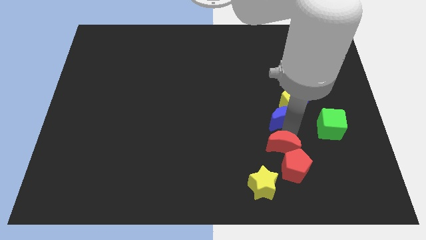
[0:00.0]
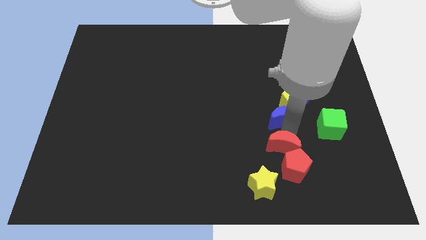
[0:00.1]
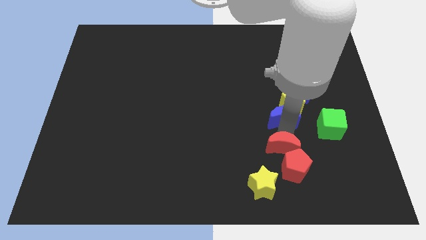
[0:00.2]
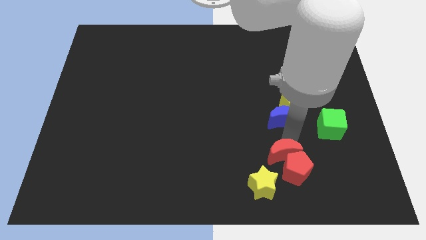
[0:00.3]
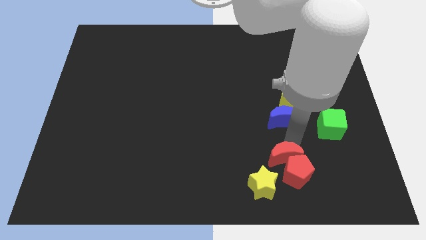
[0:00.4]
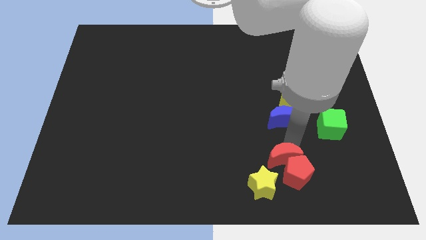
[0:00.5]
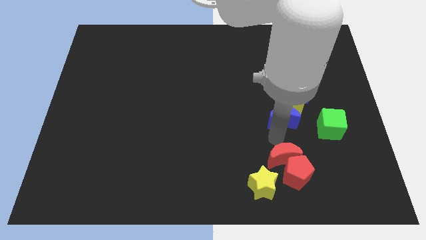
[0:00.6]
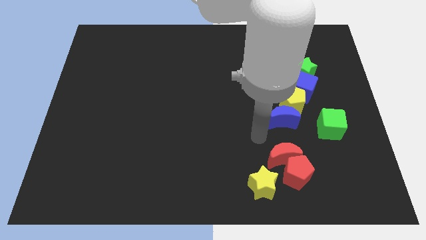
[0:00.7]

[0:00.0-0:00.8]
move the red blocks slightly to the bottom

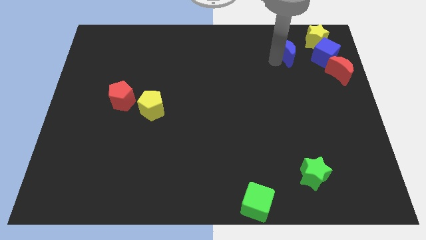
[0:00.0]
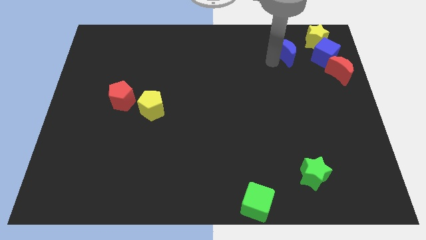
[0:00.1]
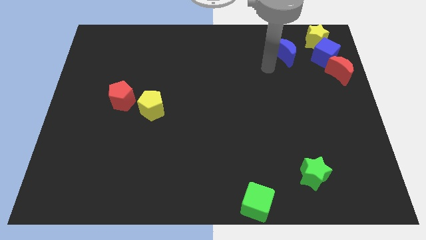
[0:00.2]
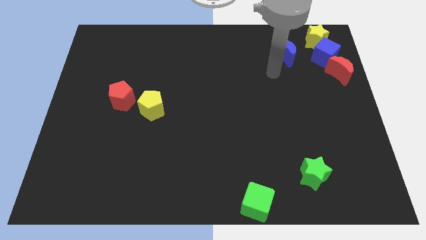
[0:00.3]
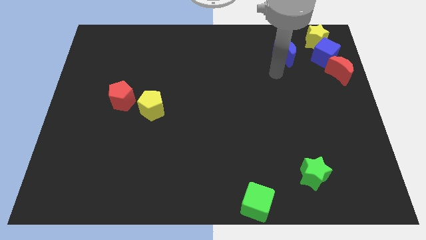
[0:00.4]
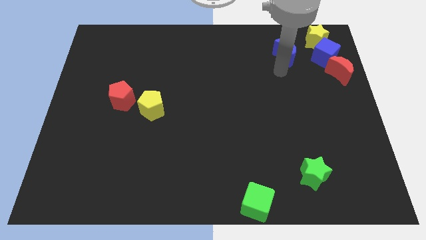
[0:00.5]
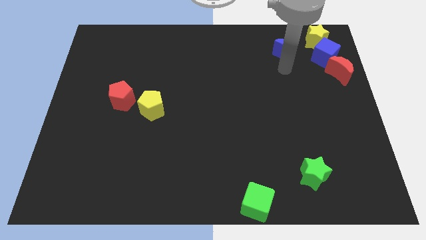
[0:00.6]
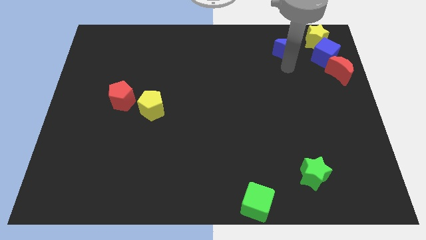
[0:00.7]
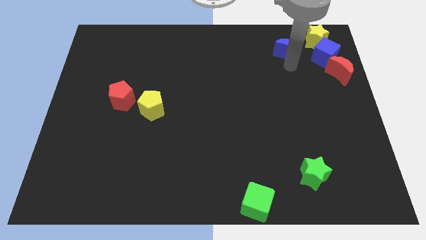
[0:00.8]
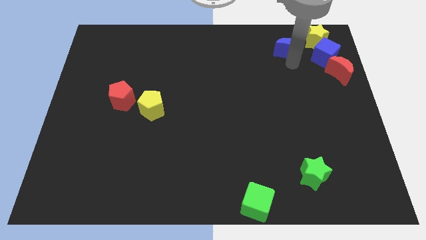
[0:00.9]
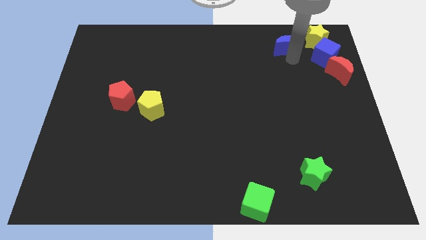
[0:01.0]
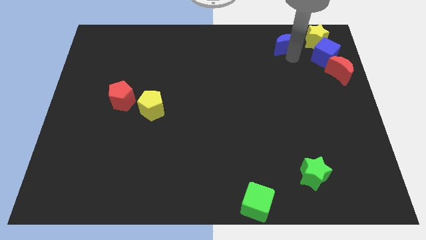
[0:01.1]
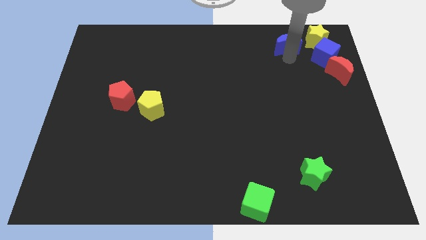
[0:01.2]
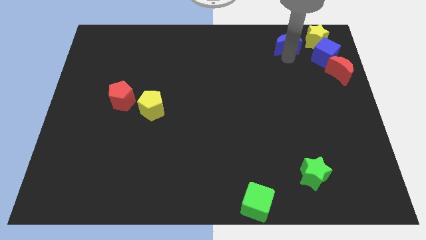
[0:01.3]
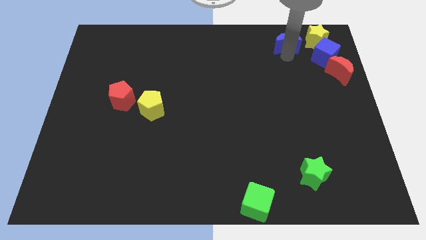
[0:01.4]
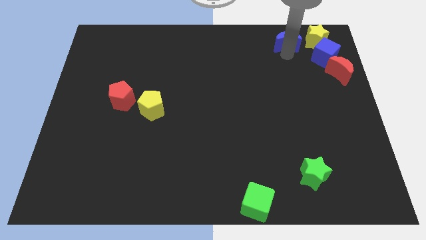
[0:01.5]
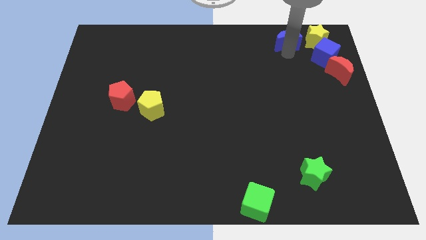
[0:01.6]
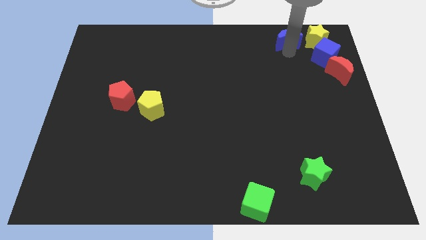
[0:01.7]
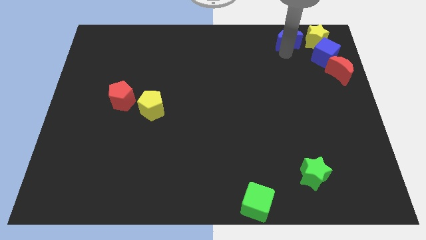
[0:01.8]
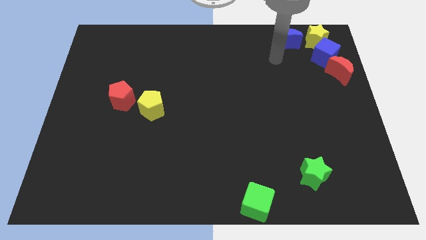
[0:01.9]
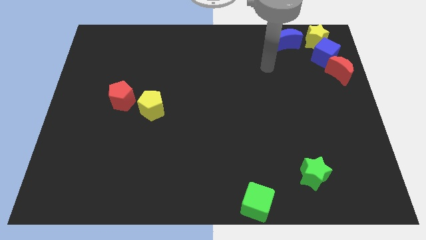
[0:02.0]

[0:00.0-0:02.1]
push blue moon up to the left of yellow star

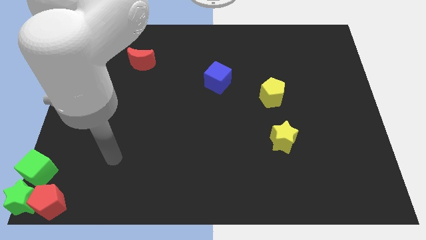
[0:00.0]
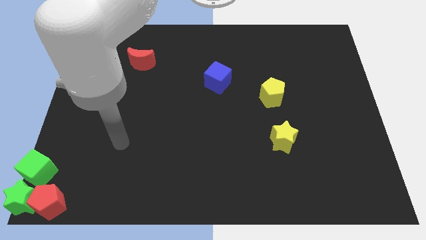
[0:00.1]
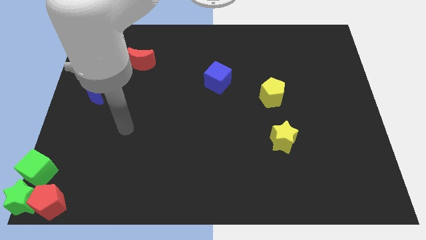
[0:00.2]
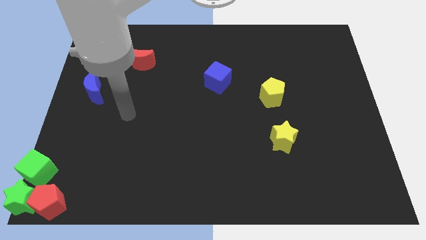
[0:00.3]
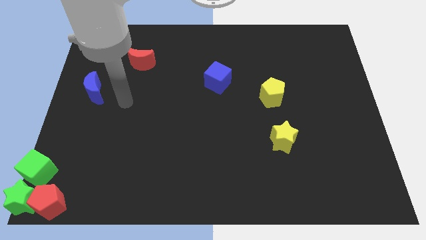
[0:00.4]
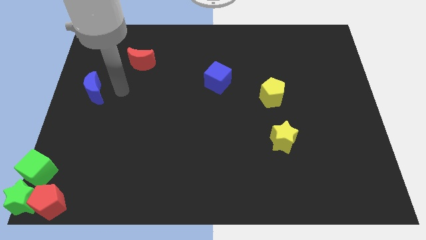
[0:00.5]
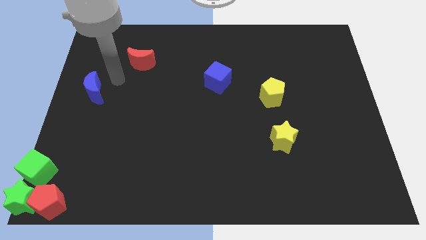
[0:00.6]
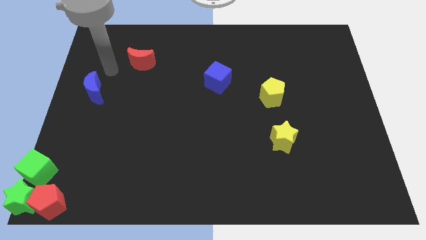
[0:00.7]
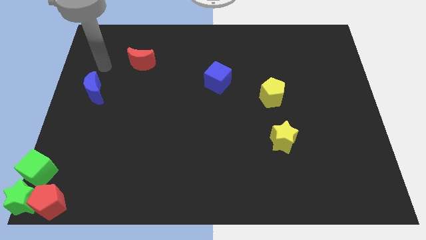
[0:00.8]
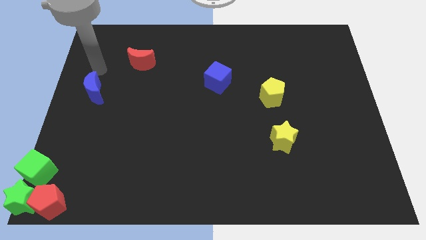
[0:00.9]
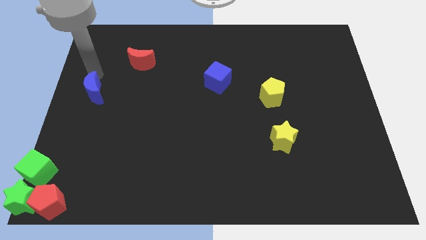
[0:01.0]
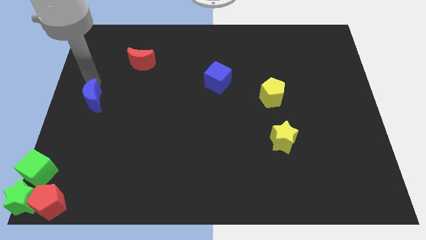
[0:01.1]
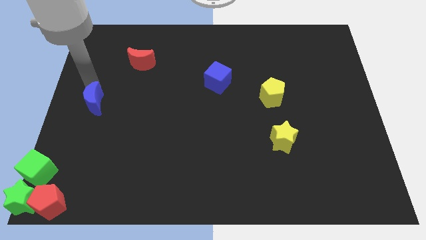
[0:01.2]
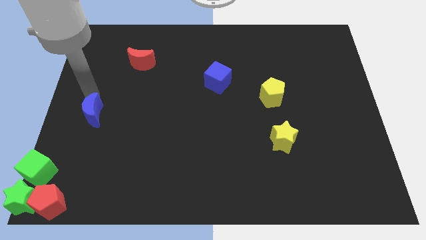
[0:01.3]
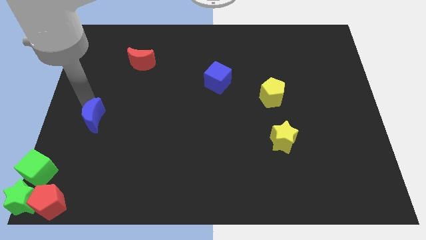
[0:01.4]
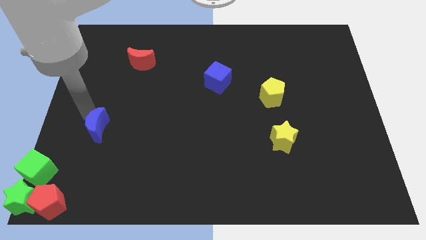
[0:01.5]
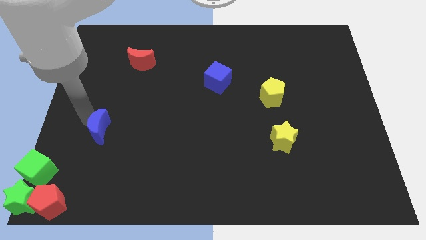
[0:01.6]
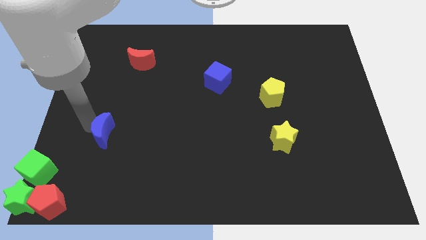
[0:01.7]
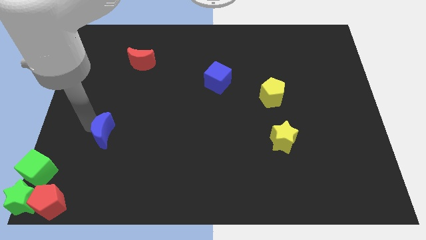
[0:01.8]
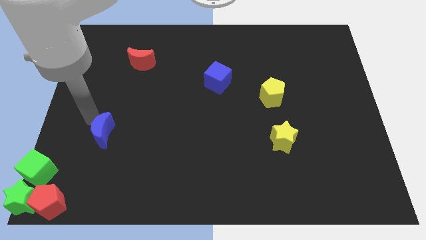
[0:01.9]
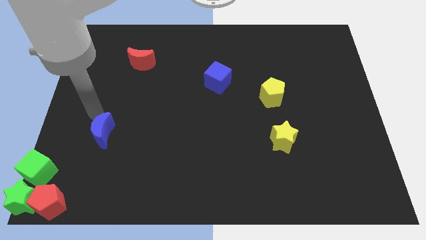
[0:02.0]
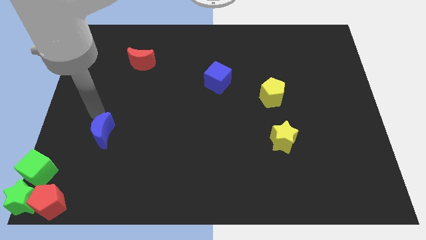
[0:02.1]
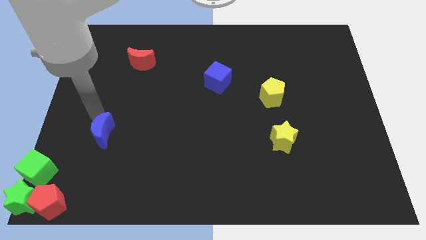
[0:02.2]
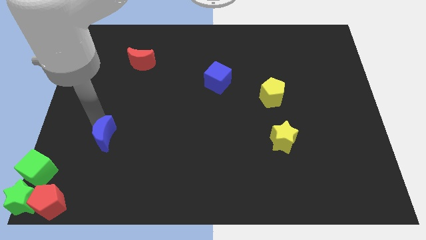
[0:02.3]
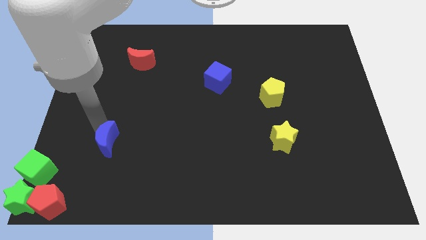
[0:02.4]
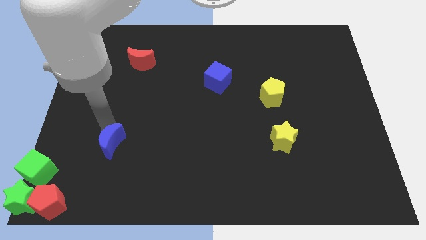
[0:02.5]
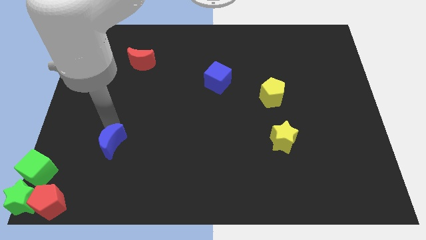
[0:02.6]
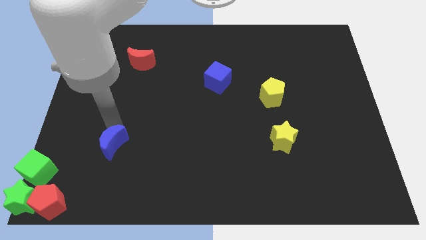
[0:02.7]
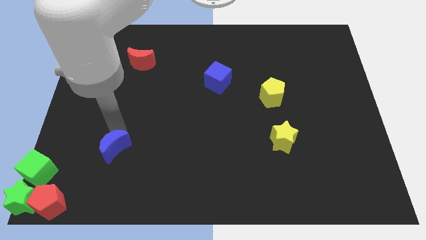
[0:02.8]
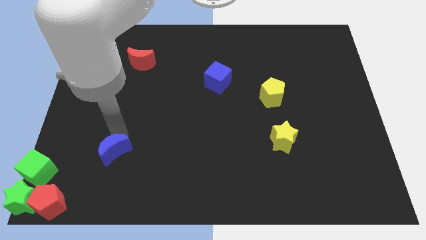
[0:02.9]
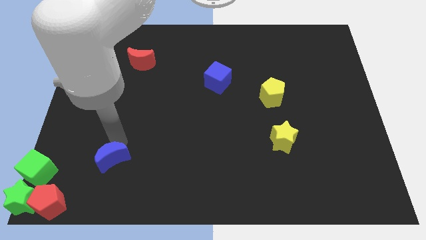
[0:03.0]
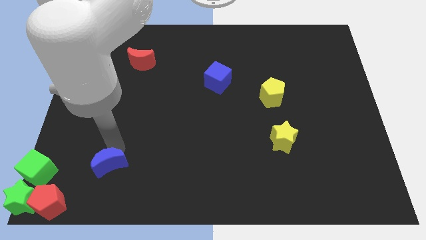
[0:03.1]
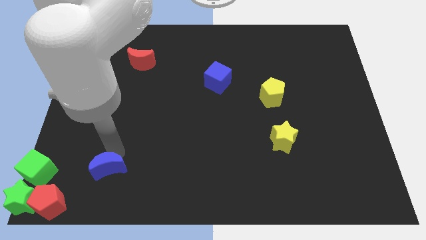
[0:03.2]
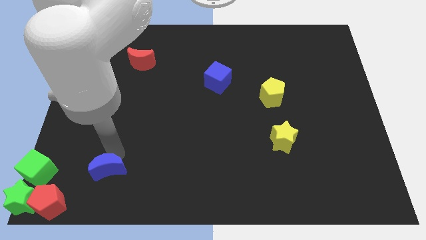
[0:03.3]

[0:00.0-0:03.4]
place the blue moon parallel to green cube

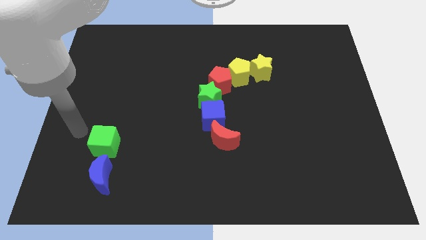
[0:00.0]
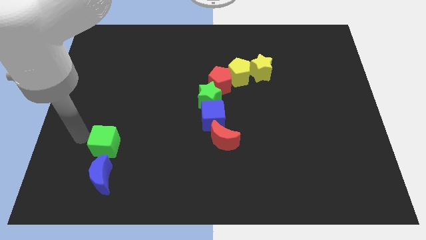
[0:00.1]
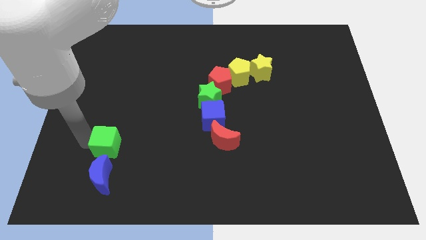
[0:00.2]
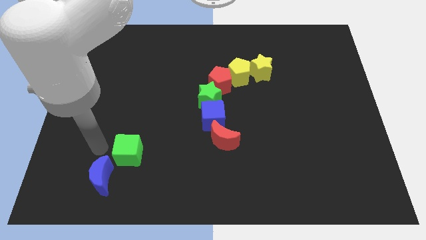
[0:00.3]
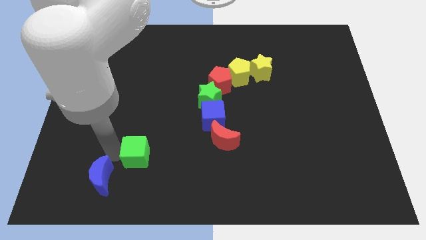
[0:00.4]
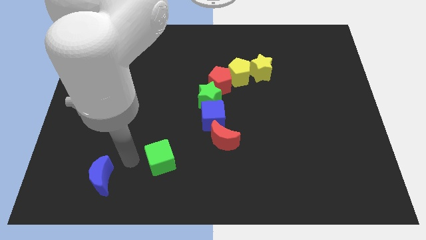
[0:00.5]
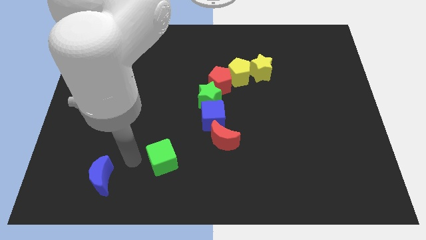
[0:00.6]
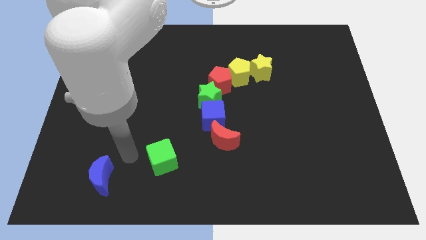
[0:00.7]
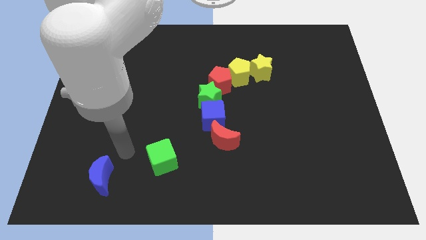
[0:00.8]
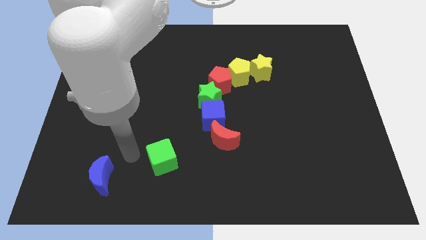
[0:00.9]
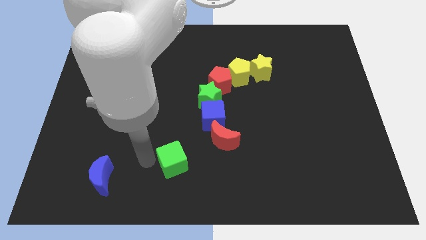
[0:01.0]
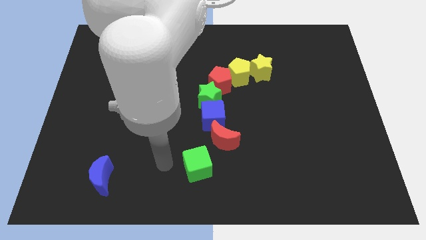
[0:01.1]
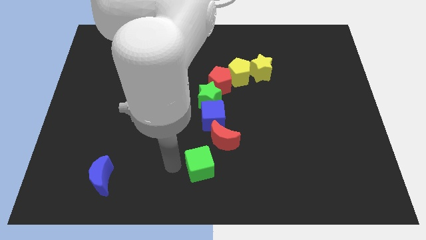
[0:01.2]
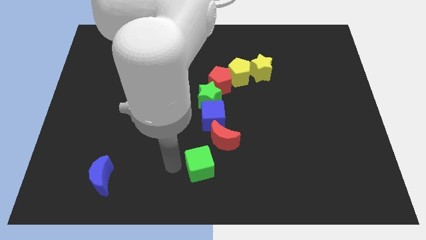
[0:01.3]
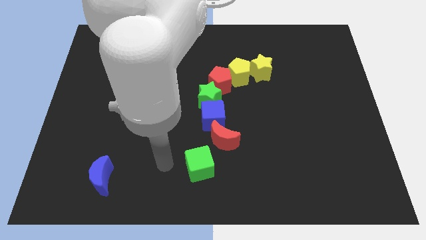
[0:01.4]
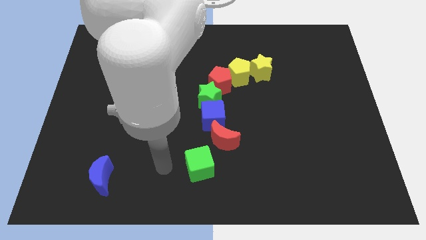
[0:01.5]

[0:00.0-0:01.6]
push the green cube at the bottom left of the red moon

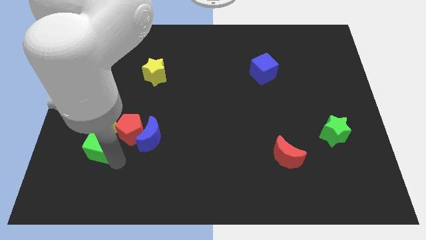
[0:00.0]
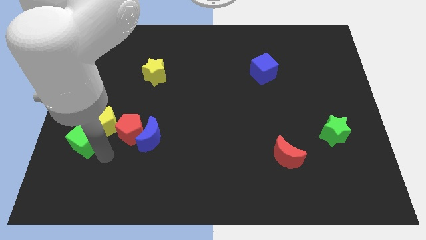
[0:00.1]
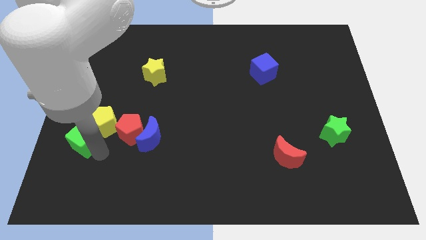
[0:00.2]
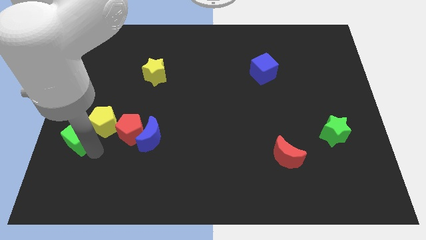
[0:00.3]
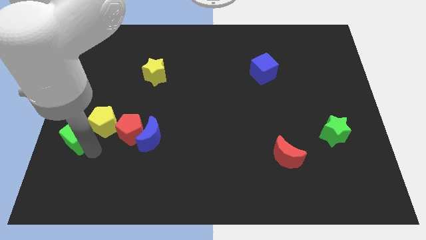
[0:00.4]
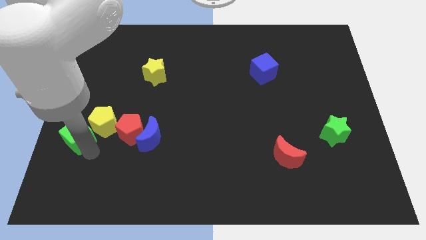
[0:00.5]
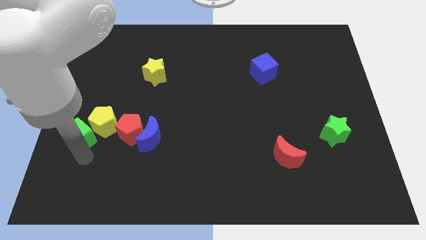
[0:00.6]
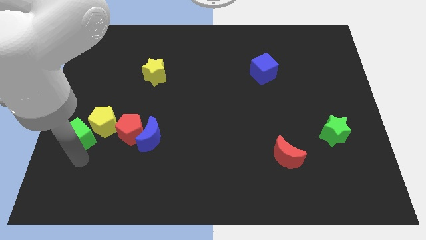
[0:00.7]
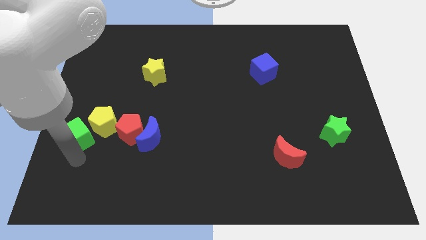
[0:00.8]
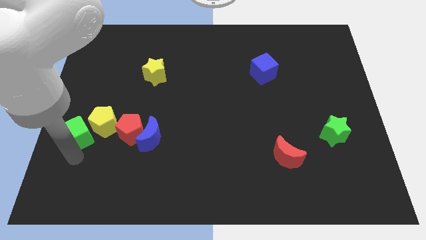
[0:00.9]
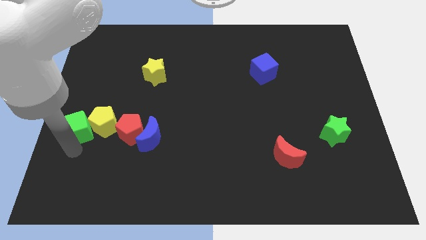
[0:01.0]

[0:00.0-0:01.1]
make the green cube touch the left side of the yellow pentagon
